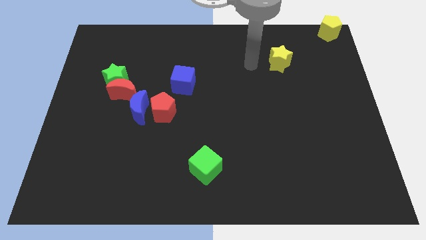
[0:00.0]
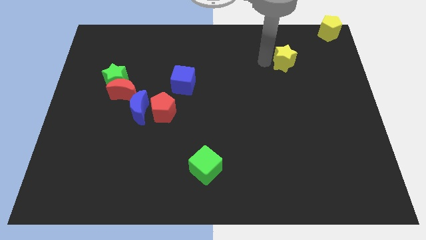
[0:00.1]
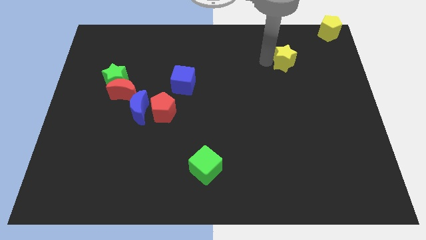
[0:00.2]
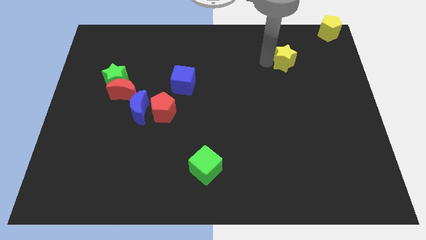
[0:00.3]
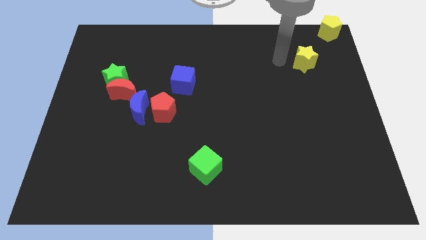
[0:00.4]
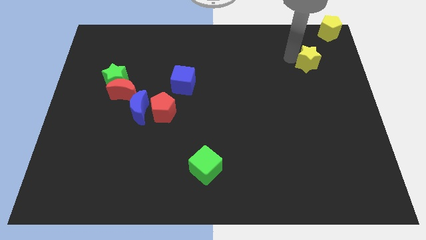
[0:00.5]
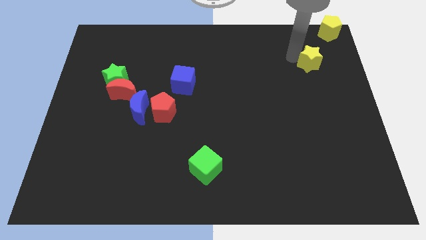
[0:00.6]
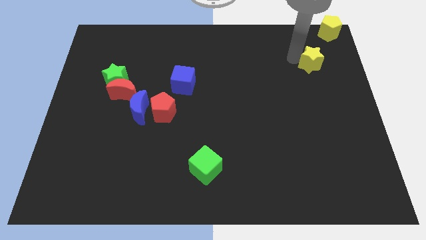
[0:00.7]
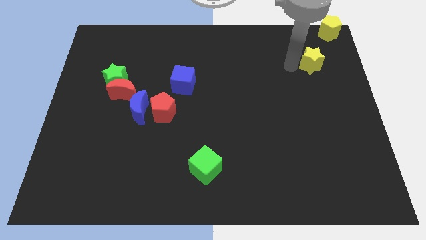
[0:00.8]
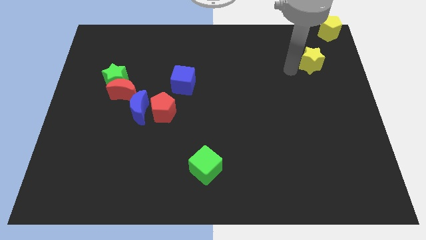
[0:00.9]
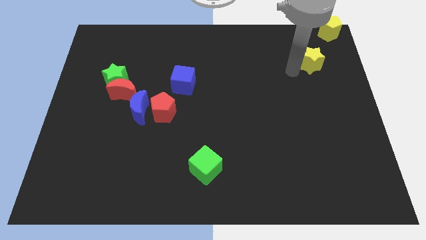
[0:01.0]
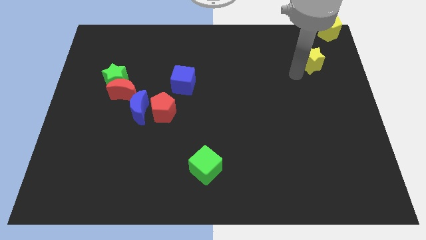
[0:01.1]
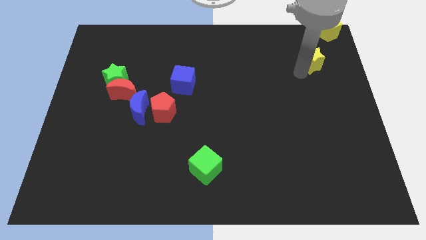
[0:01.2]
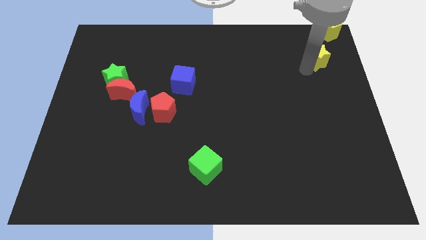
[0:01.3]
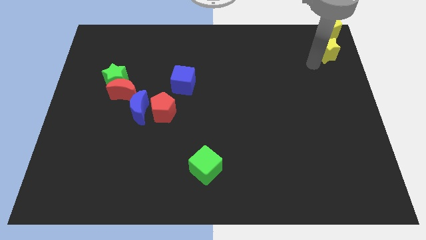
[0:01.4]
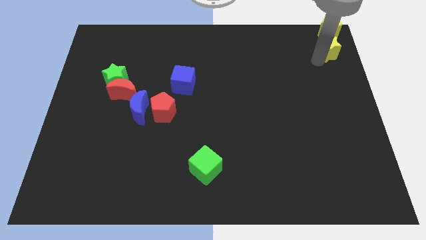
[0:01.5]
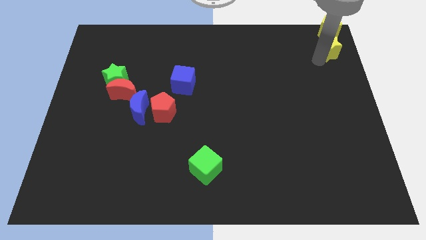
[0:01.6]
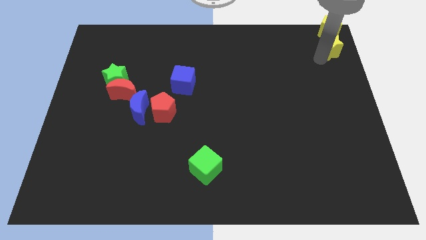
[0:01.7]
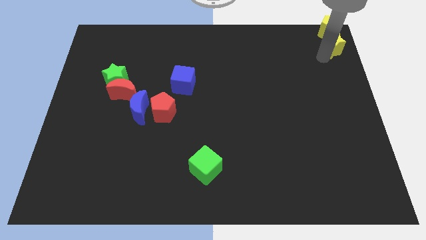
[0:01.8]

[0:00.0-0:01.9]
put the yellow star below the yellow pentagon

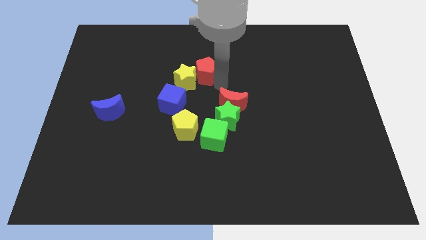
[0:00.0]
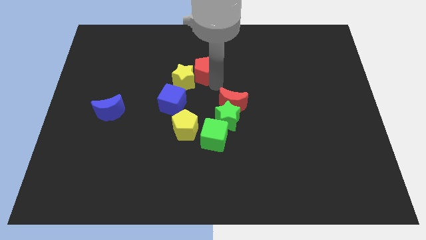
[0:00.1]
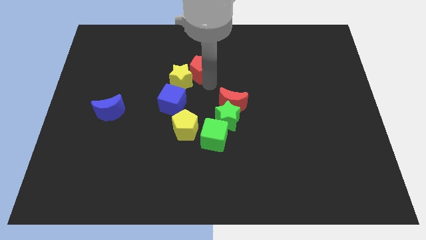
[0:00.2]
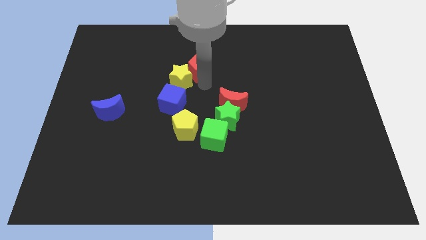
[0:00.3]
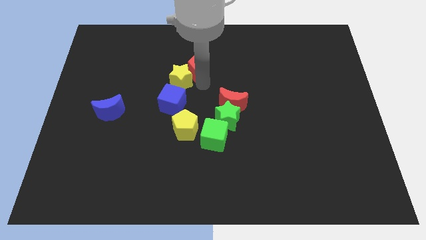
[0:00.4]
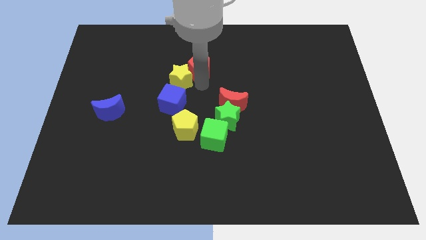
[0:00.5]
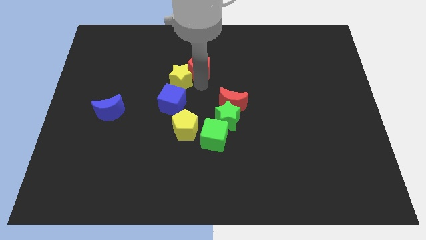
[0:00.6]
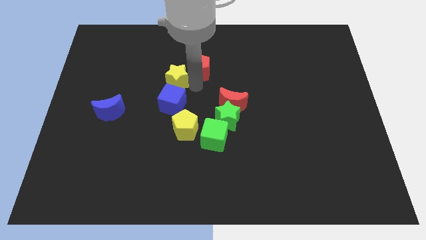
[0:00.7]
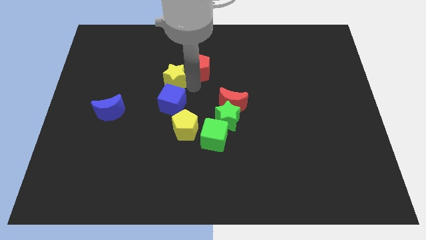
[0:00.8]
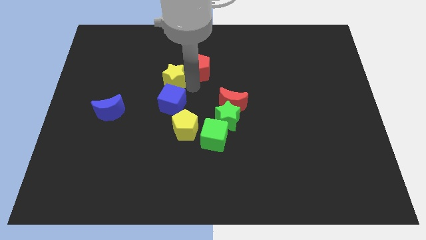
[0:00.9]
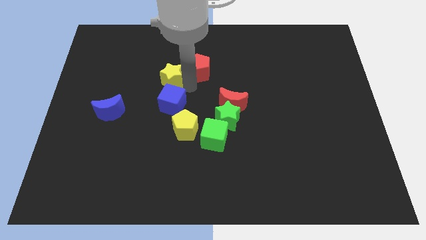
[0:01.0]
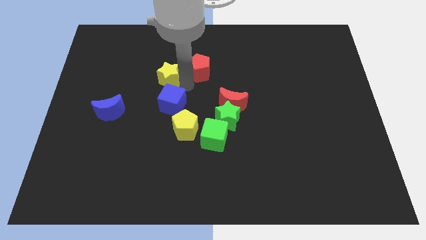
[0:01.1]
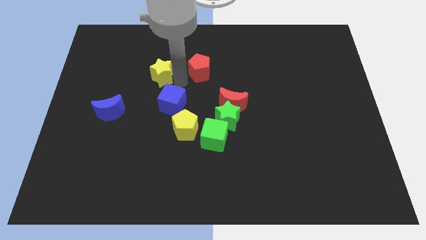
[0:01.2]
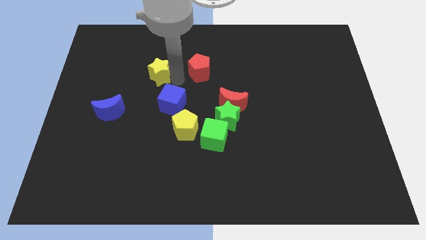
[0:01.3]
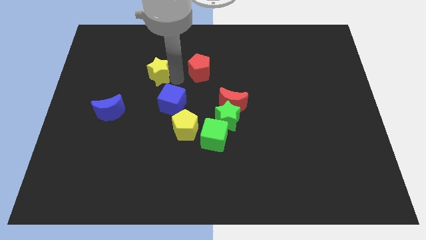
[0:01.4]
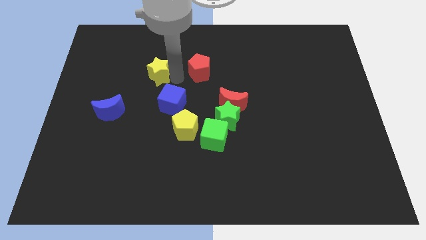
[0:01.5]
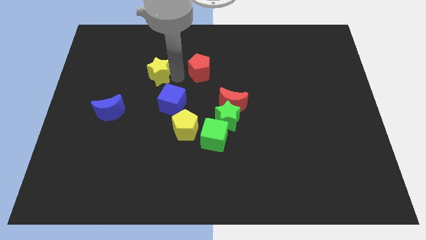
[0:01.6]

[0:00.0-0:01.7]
move yellow star away from red pentagon

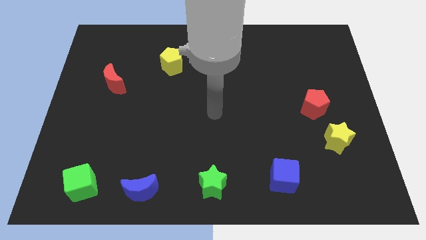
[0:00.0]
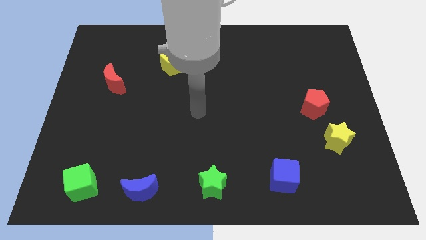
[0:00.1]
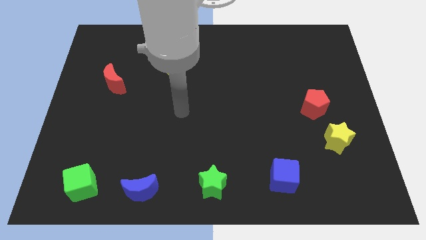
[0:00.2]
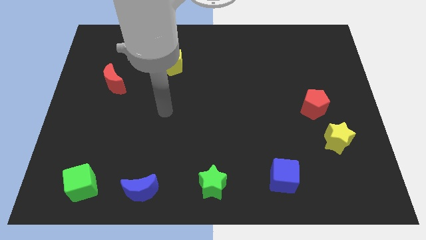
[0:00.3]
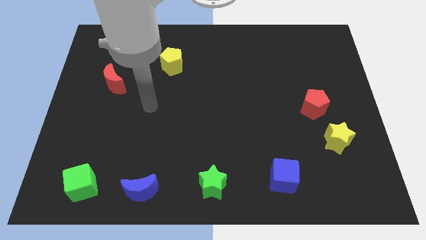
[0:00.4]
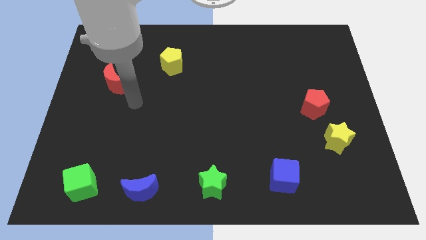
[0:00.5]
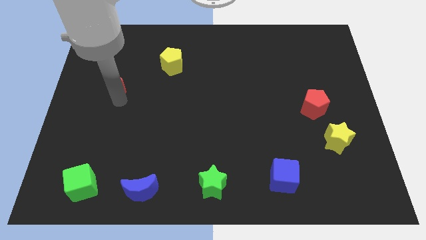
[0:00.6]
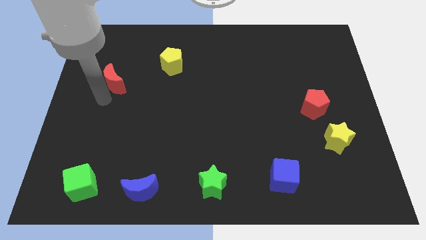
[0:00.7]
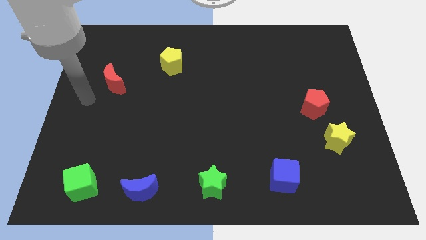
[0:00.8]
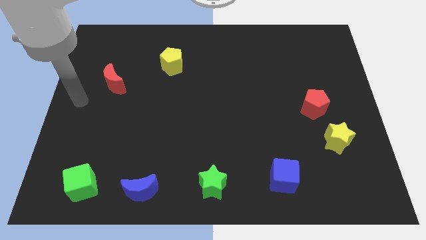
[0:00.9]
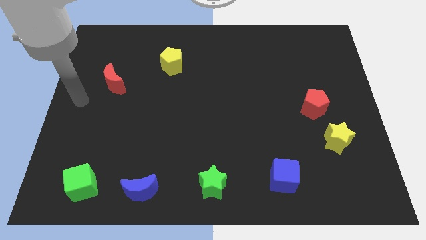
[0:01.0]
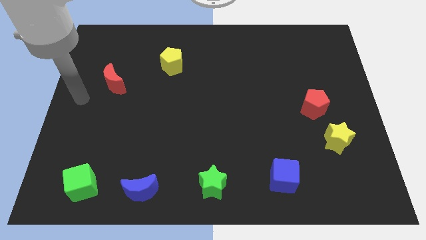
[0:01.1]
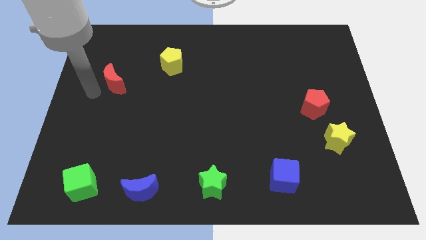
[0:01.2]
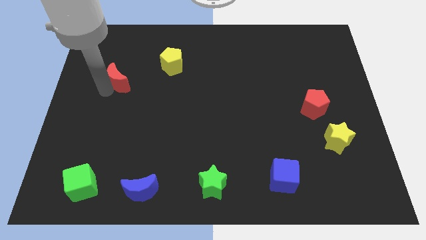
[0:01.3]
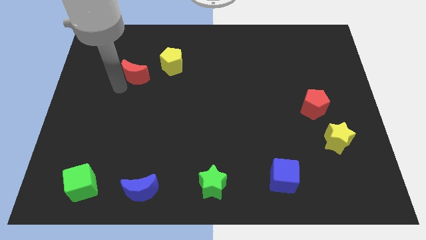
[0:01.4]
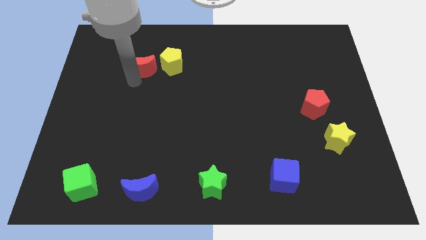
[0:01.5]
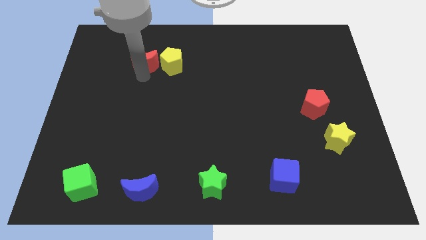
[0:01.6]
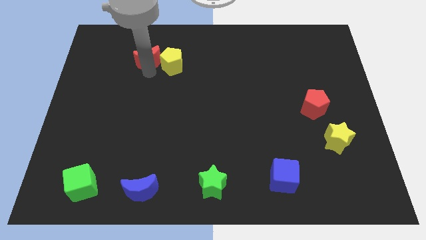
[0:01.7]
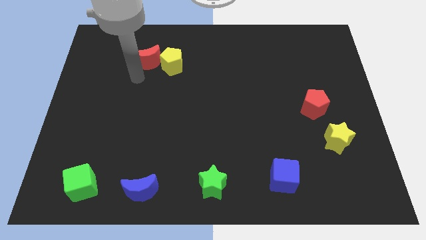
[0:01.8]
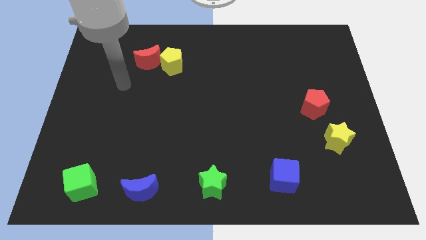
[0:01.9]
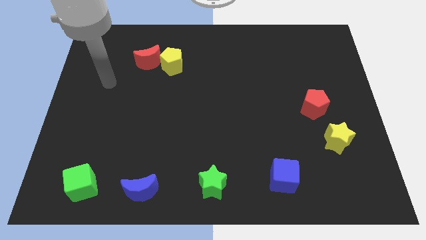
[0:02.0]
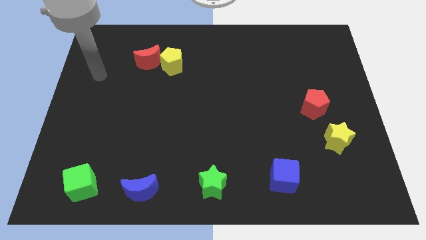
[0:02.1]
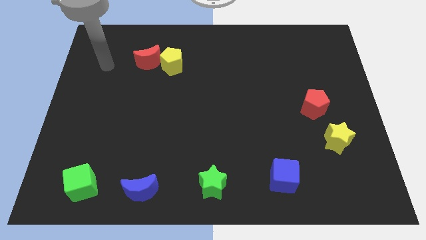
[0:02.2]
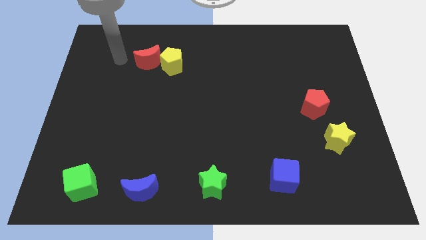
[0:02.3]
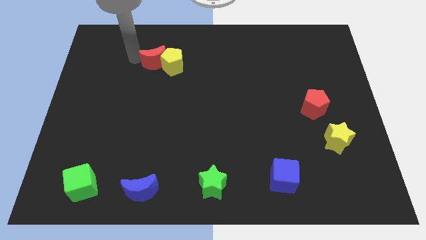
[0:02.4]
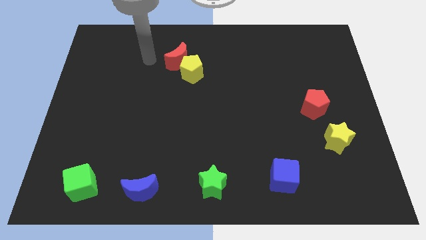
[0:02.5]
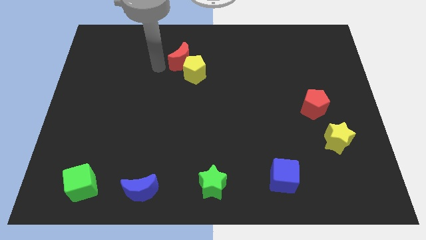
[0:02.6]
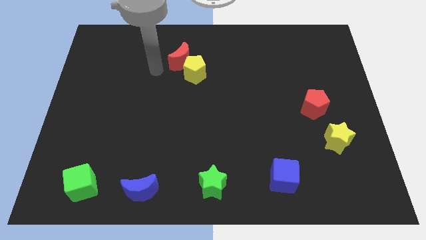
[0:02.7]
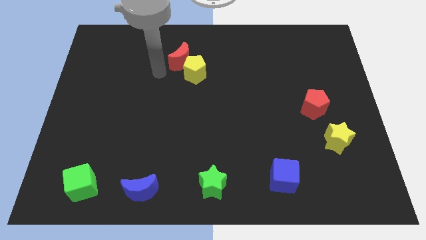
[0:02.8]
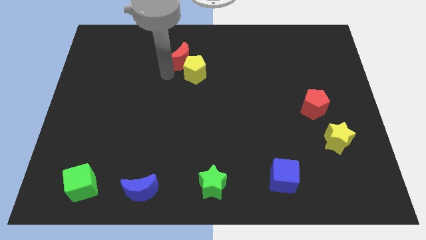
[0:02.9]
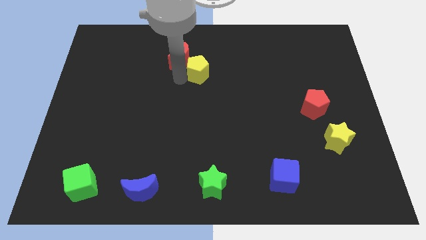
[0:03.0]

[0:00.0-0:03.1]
move the red moon into the yellow pentagon

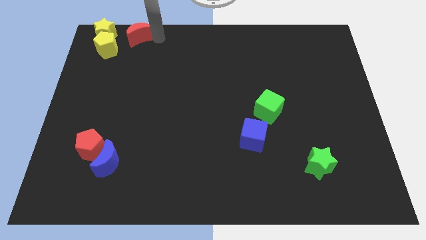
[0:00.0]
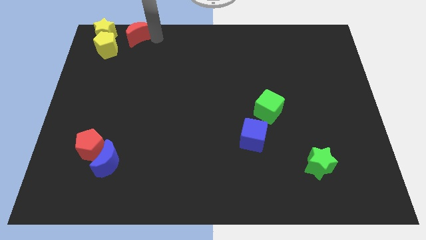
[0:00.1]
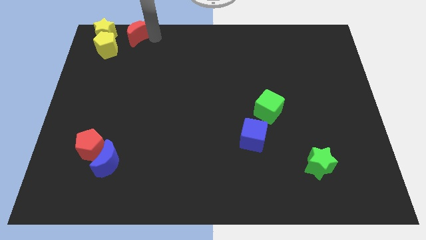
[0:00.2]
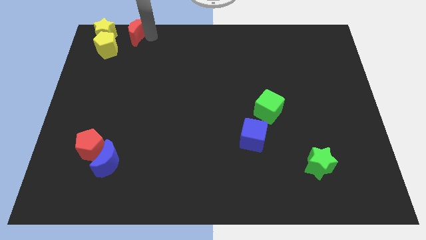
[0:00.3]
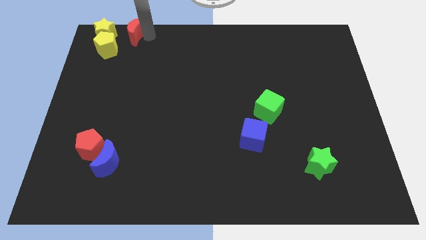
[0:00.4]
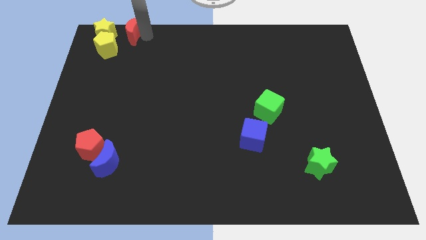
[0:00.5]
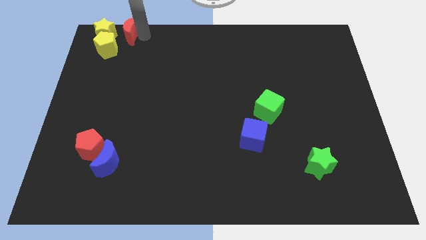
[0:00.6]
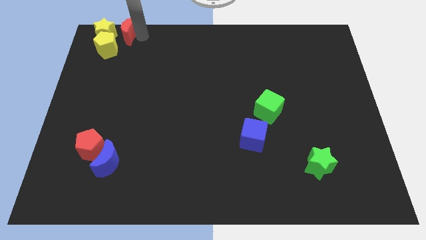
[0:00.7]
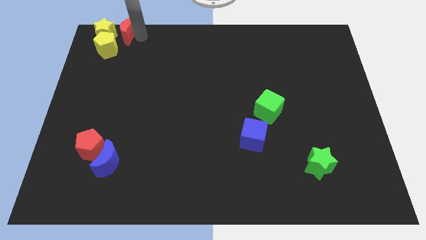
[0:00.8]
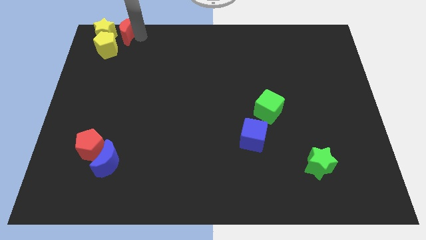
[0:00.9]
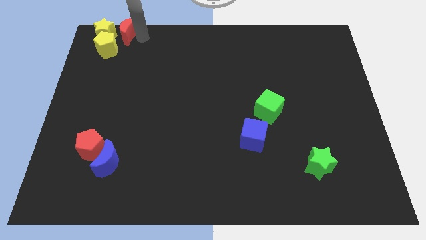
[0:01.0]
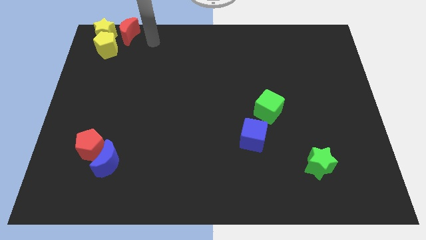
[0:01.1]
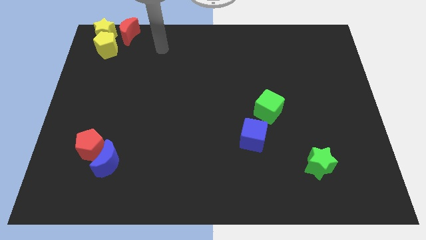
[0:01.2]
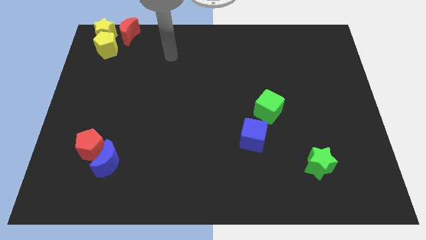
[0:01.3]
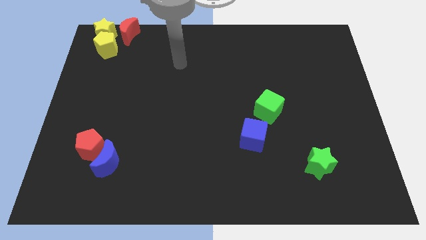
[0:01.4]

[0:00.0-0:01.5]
move the red moon close to the yellow star

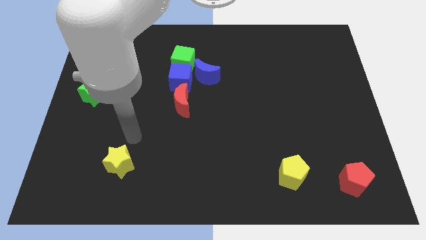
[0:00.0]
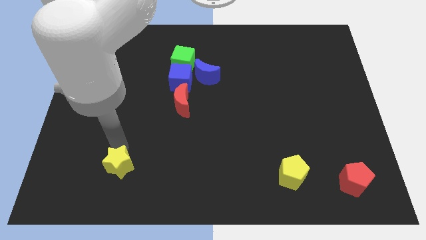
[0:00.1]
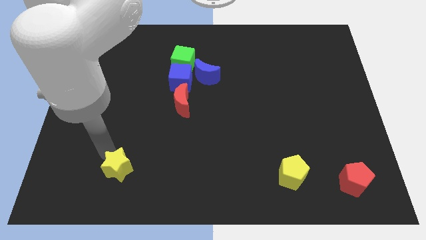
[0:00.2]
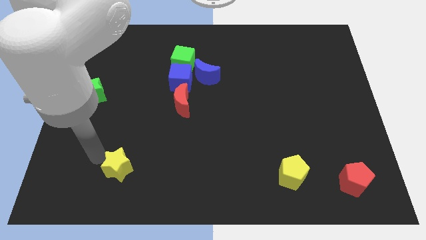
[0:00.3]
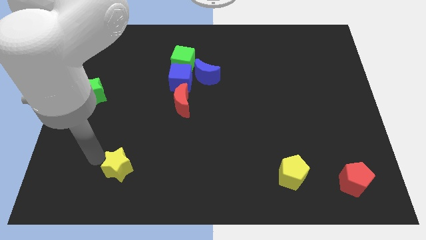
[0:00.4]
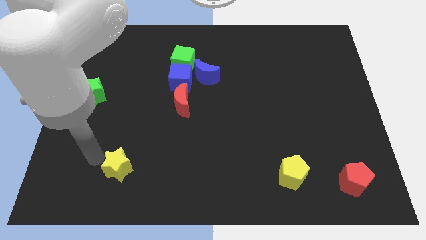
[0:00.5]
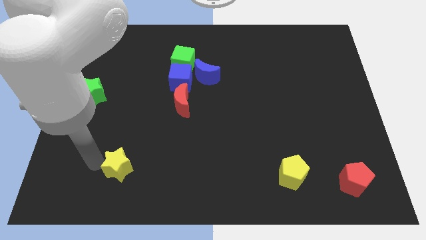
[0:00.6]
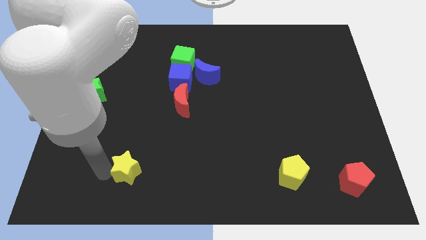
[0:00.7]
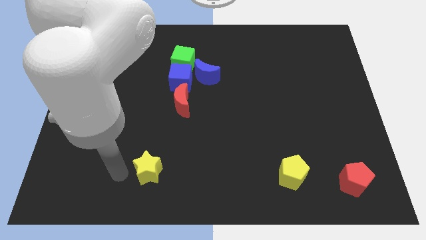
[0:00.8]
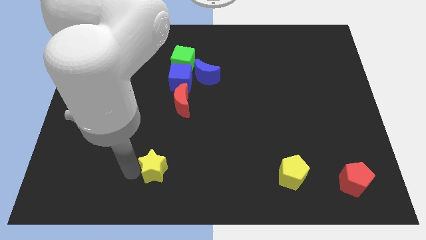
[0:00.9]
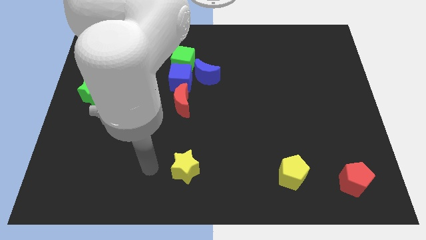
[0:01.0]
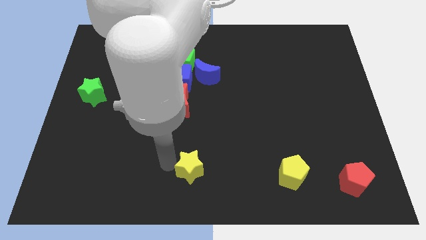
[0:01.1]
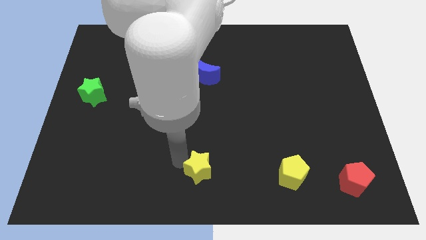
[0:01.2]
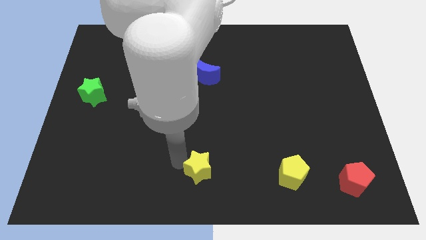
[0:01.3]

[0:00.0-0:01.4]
move the yellow star towards the yellow pentagon
